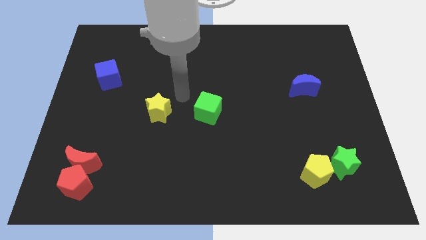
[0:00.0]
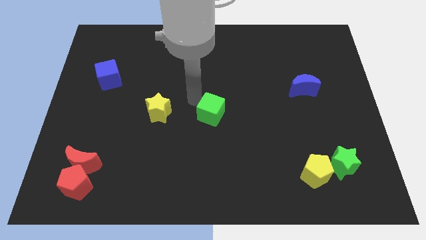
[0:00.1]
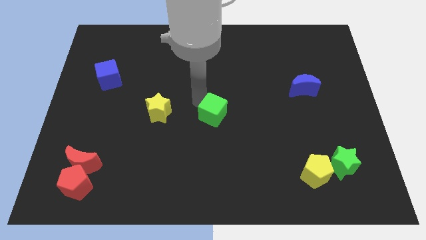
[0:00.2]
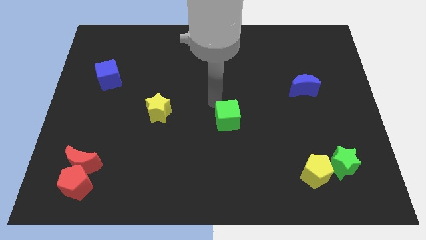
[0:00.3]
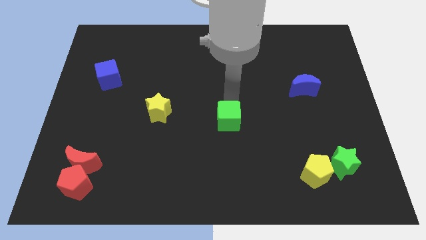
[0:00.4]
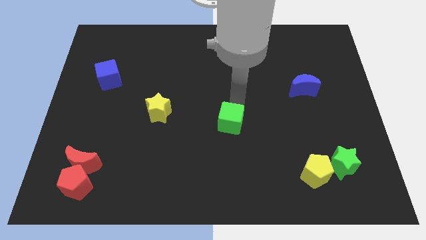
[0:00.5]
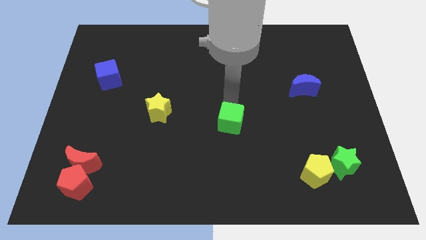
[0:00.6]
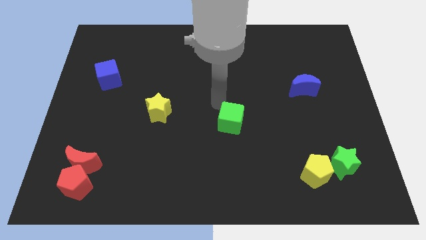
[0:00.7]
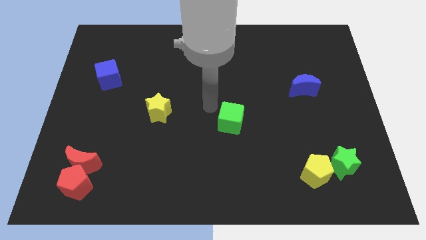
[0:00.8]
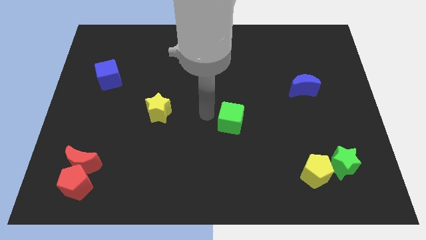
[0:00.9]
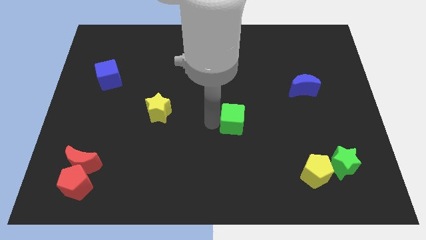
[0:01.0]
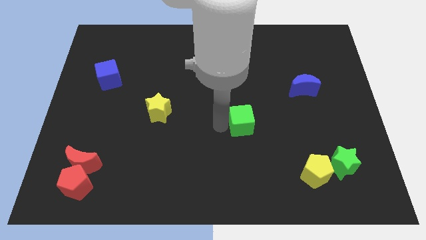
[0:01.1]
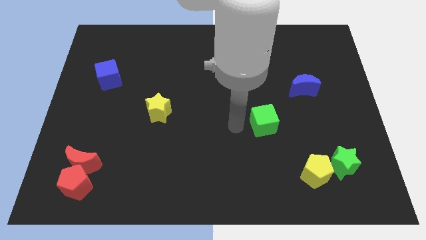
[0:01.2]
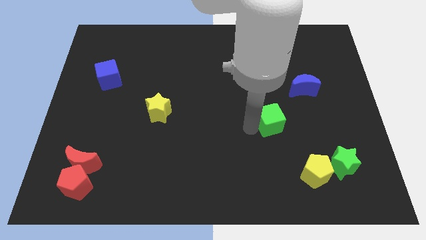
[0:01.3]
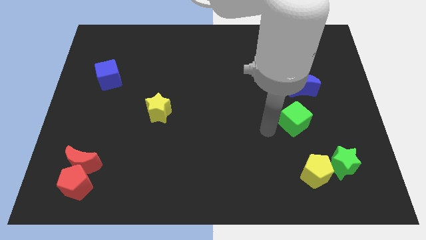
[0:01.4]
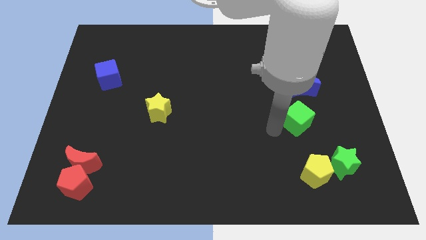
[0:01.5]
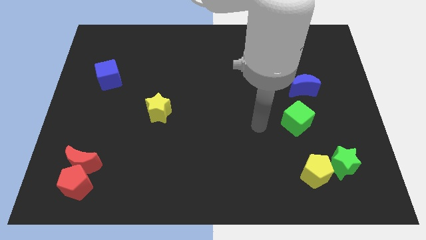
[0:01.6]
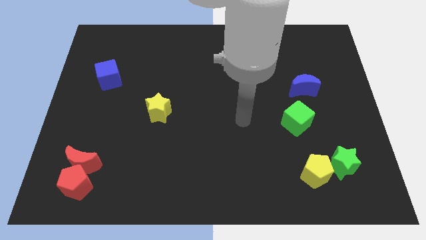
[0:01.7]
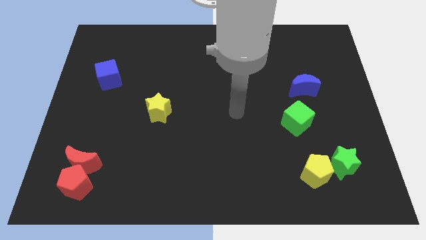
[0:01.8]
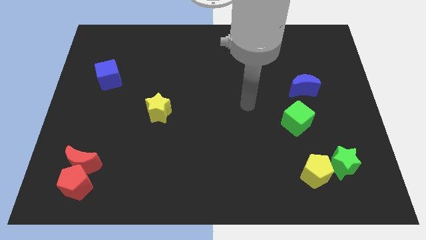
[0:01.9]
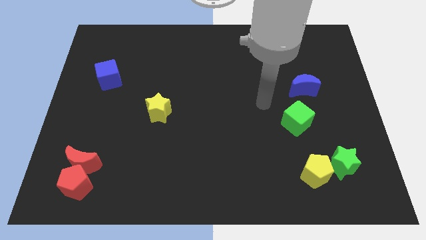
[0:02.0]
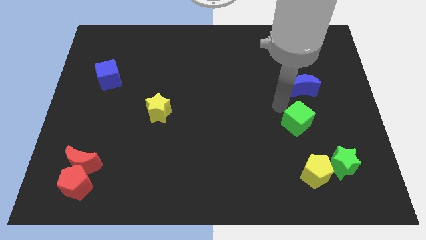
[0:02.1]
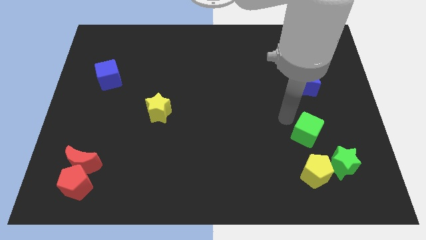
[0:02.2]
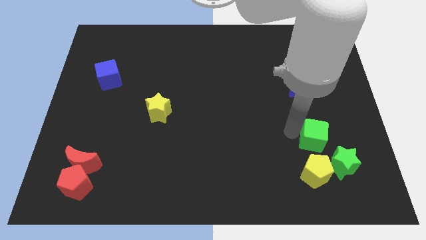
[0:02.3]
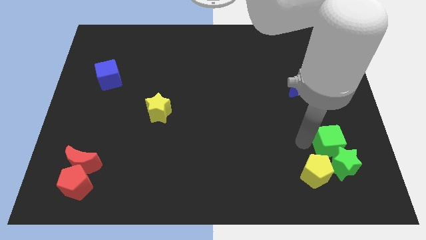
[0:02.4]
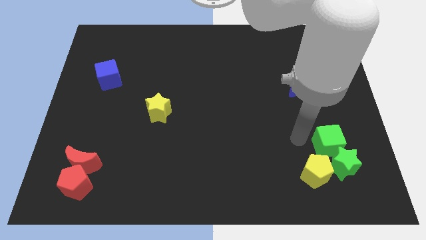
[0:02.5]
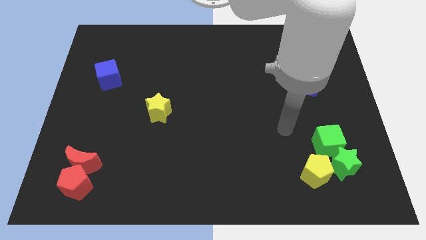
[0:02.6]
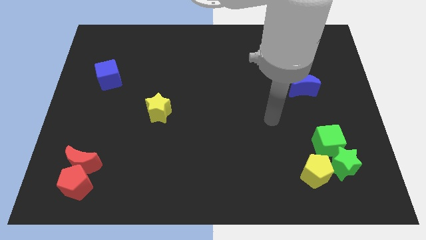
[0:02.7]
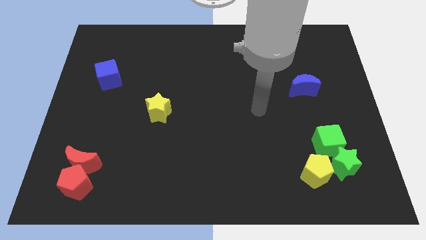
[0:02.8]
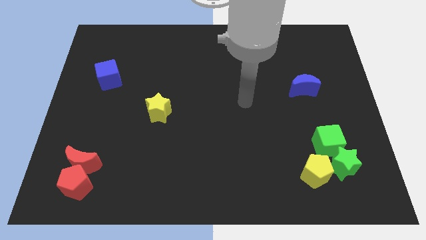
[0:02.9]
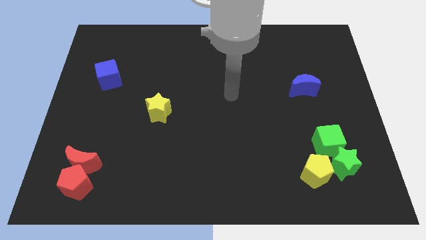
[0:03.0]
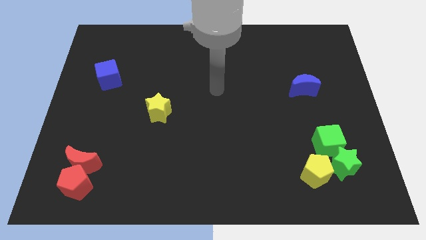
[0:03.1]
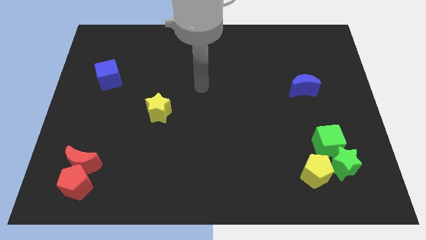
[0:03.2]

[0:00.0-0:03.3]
push the green cube close to the green star

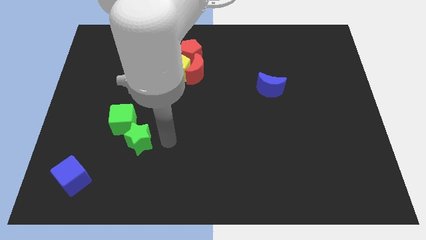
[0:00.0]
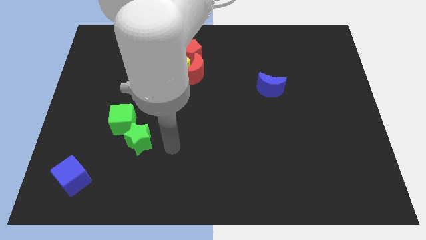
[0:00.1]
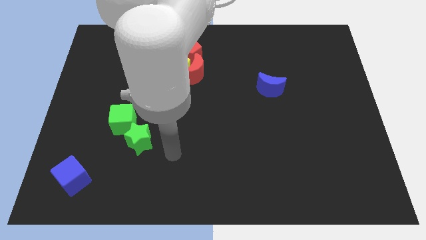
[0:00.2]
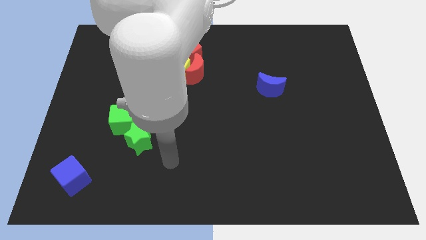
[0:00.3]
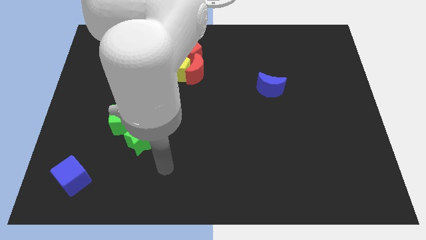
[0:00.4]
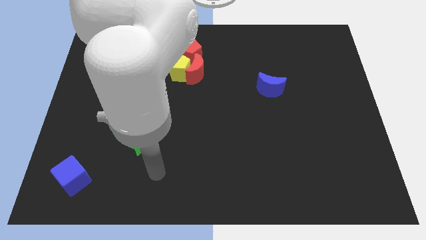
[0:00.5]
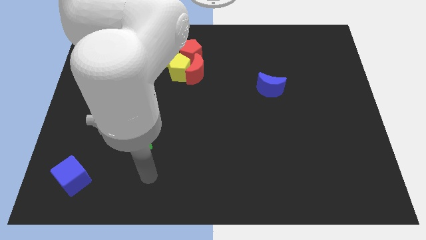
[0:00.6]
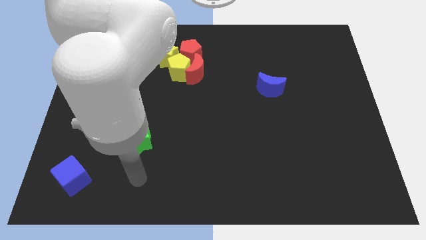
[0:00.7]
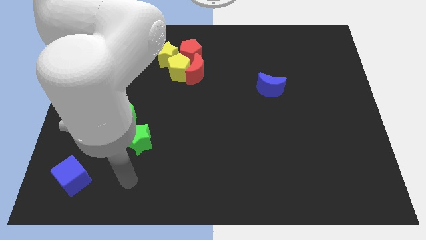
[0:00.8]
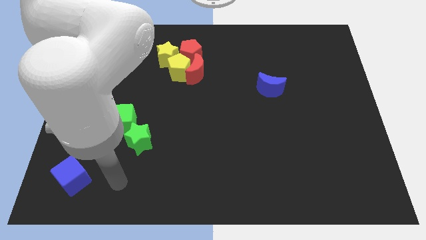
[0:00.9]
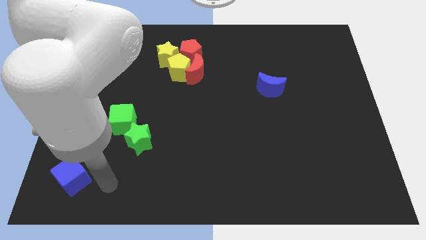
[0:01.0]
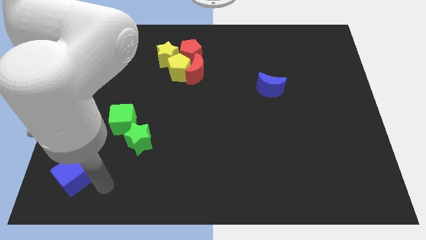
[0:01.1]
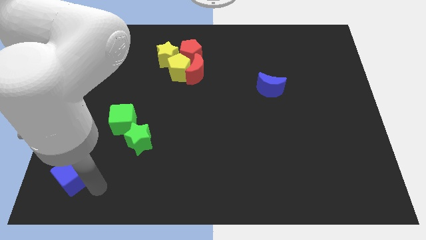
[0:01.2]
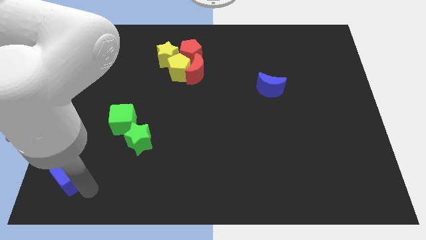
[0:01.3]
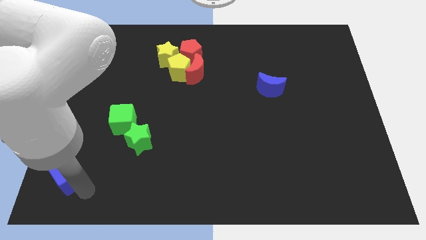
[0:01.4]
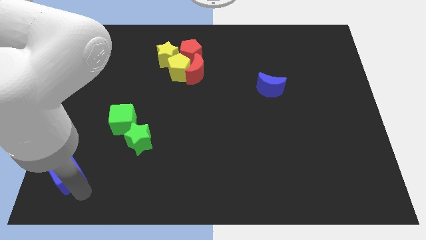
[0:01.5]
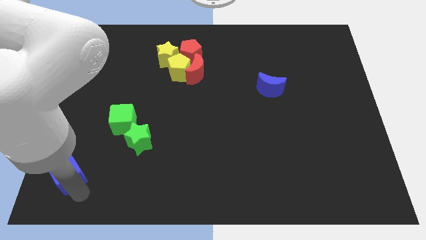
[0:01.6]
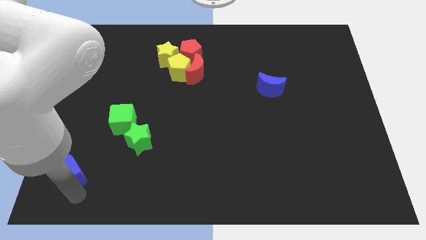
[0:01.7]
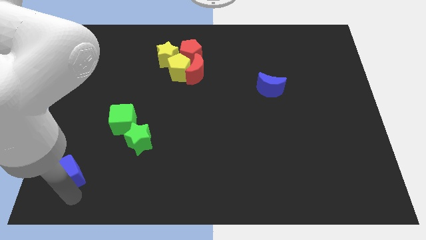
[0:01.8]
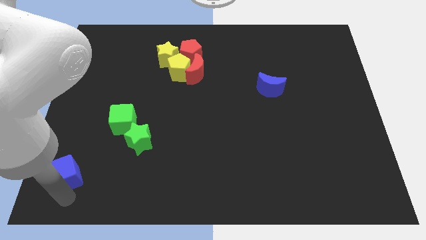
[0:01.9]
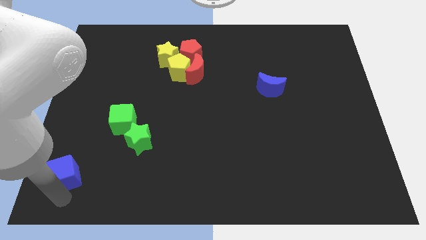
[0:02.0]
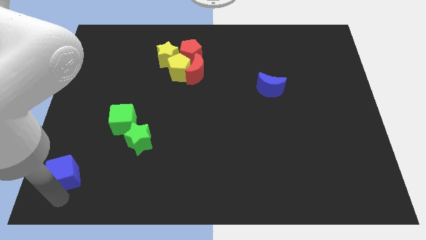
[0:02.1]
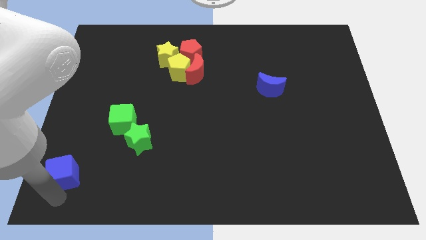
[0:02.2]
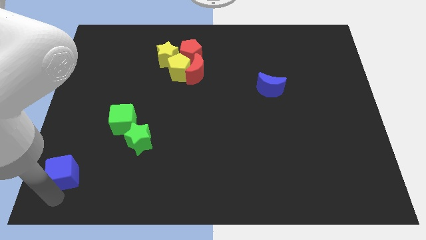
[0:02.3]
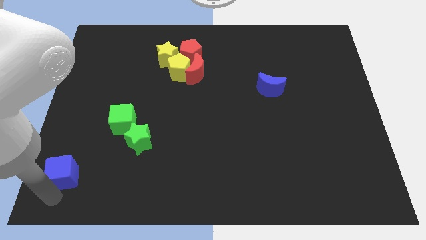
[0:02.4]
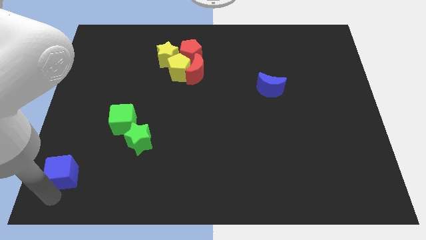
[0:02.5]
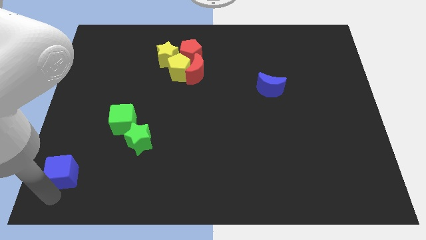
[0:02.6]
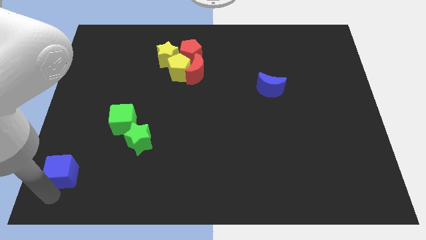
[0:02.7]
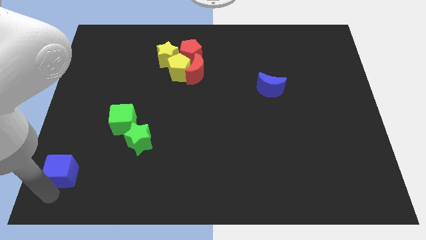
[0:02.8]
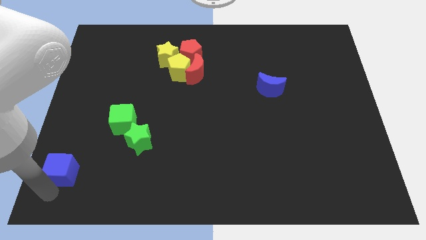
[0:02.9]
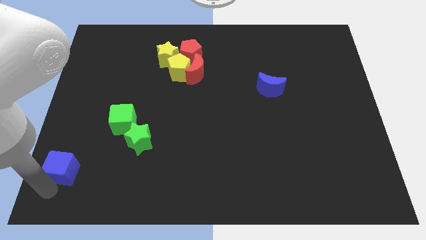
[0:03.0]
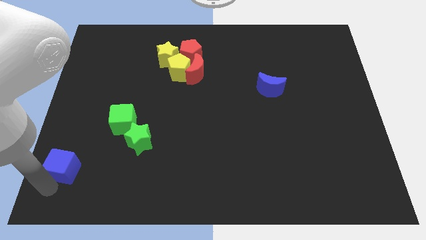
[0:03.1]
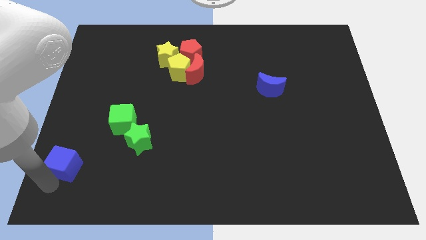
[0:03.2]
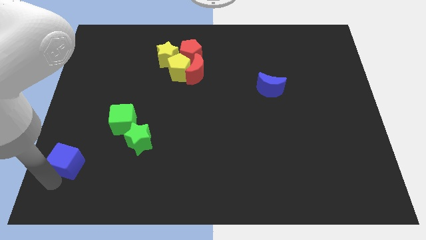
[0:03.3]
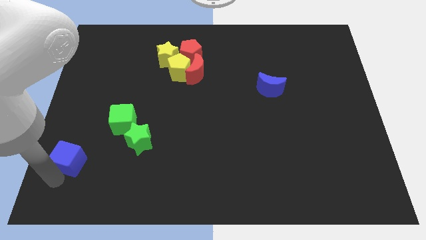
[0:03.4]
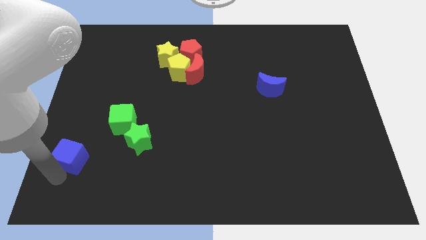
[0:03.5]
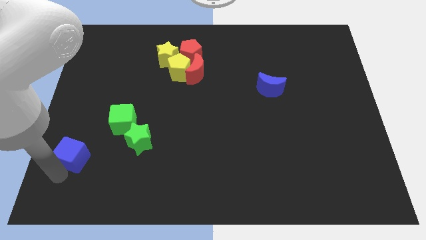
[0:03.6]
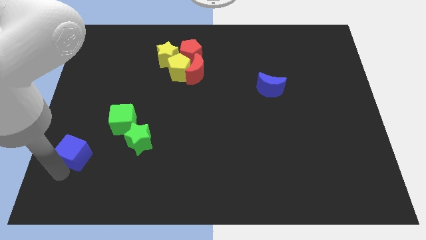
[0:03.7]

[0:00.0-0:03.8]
move the blue cube slightly up

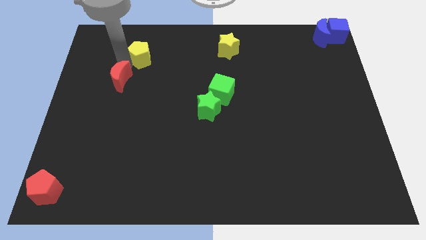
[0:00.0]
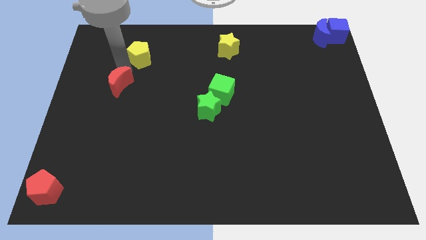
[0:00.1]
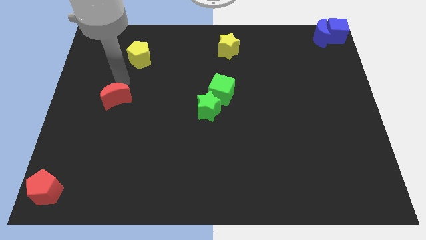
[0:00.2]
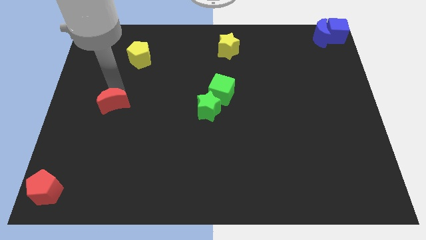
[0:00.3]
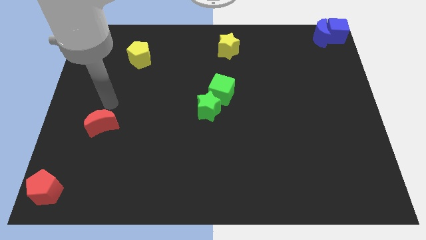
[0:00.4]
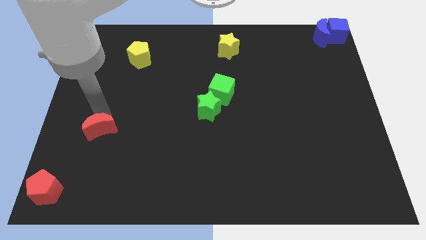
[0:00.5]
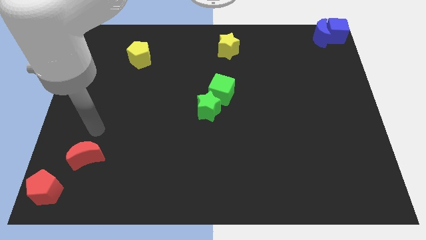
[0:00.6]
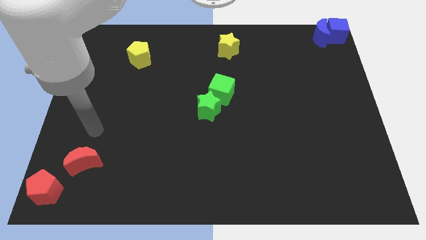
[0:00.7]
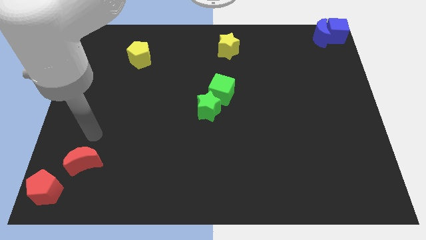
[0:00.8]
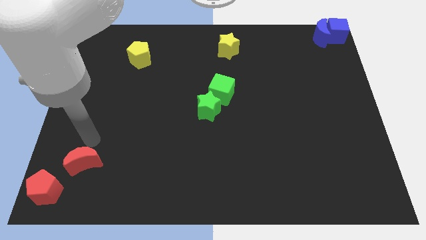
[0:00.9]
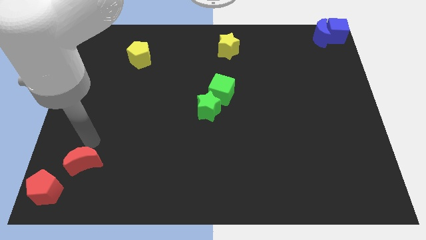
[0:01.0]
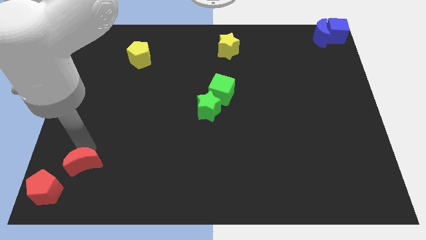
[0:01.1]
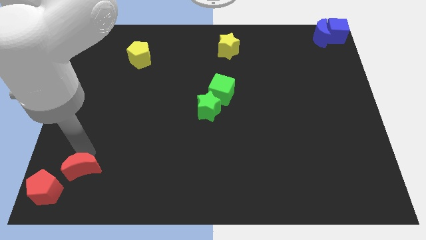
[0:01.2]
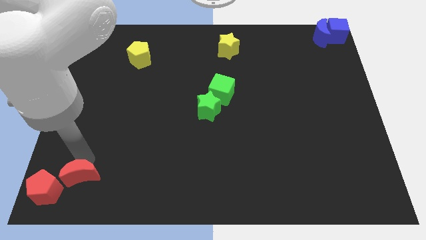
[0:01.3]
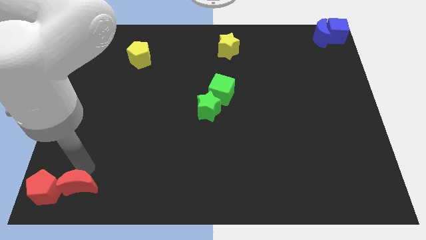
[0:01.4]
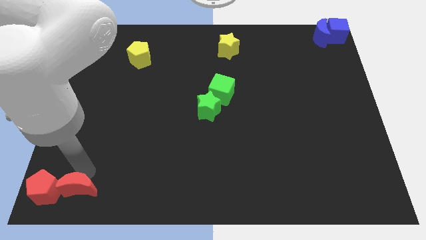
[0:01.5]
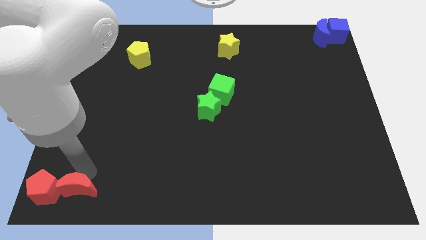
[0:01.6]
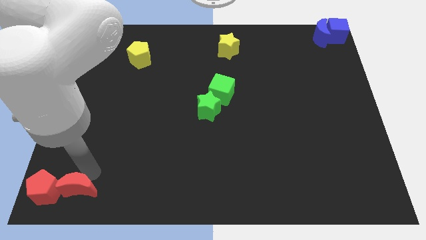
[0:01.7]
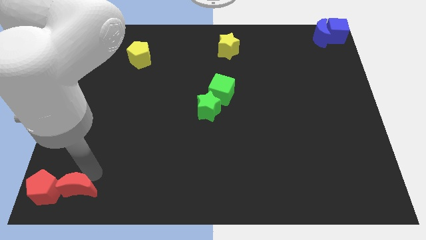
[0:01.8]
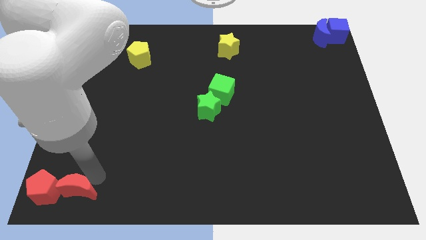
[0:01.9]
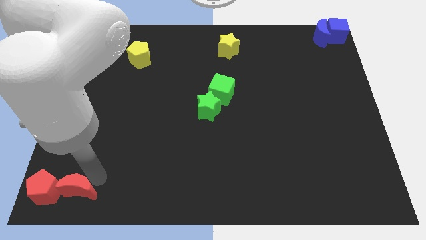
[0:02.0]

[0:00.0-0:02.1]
place the red pentagon to the right of the red pentagon
